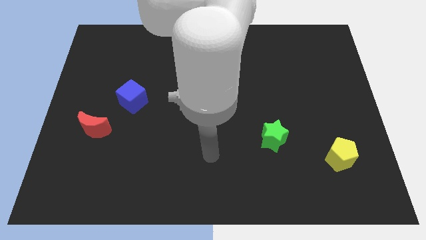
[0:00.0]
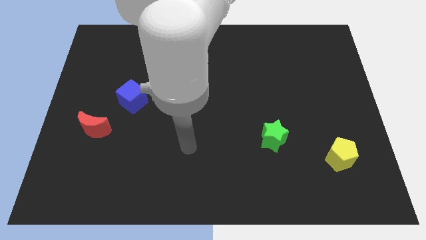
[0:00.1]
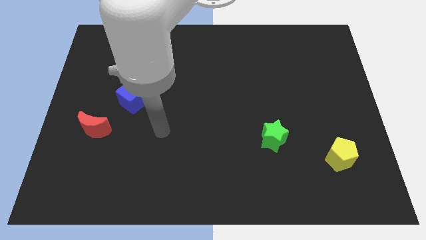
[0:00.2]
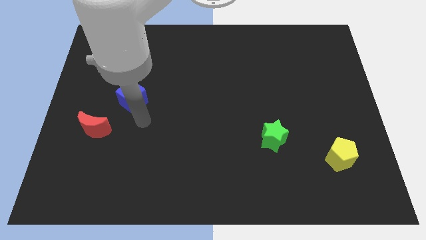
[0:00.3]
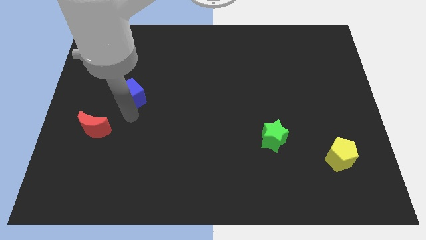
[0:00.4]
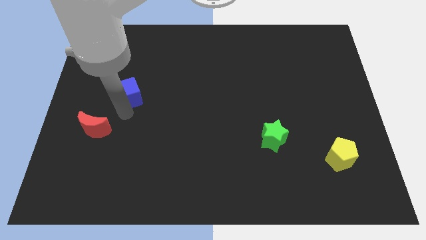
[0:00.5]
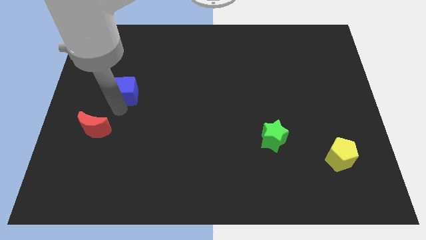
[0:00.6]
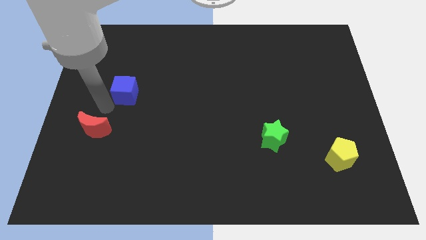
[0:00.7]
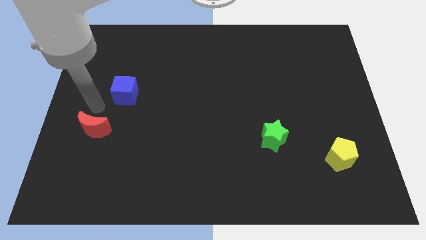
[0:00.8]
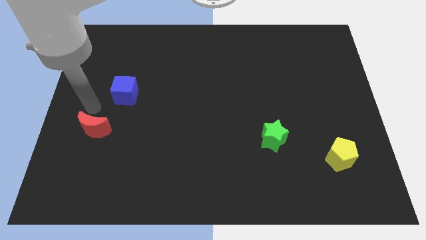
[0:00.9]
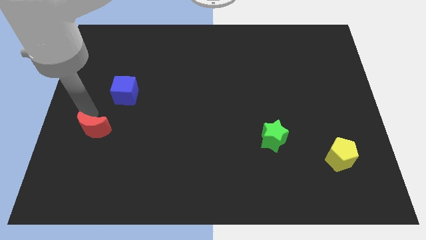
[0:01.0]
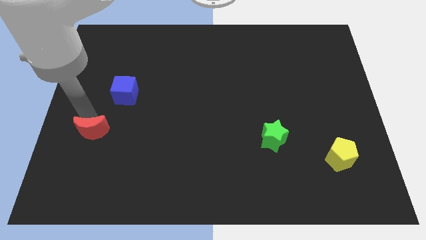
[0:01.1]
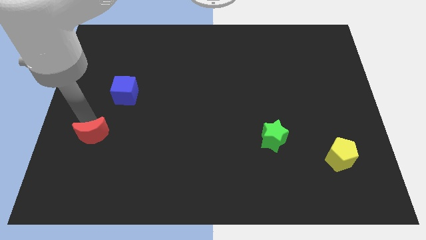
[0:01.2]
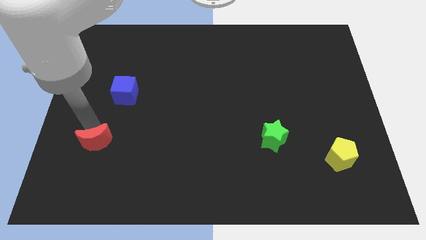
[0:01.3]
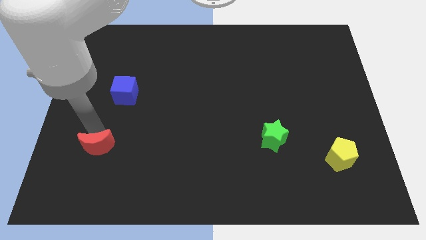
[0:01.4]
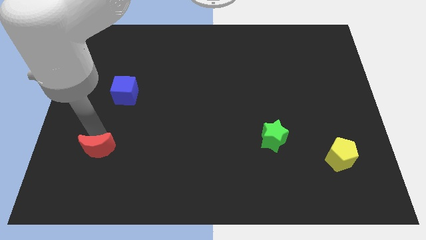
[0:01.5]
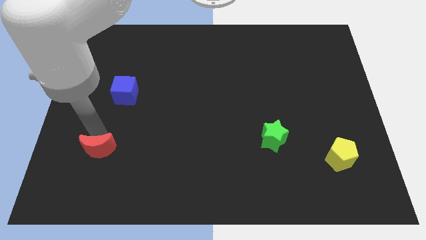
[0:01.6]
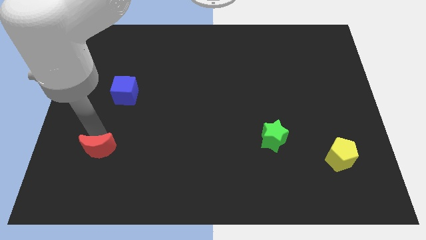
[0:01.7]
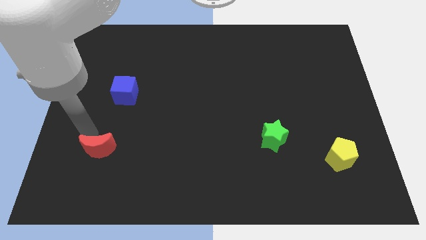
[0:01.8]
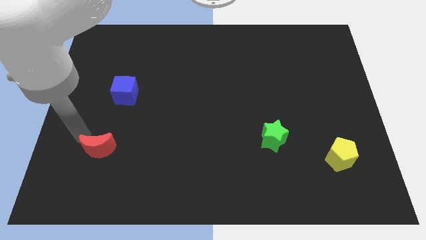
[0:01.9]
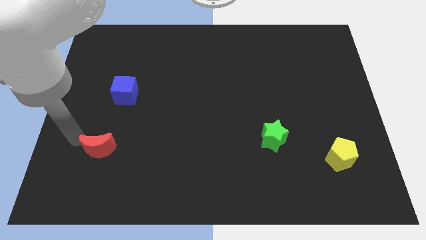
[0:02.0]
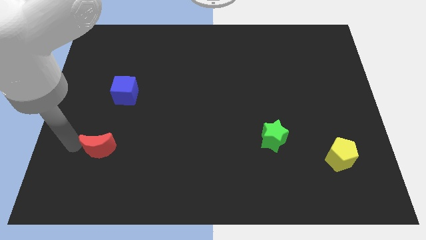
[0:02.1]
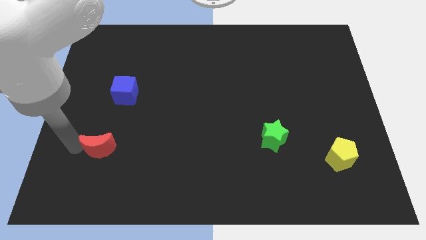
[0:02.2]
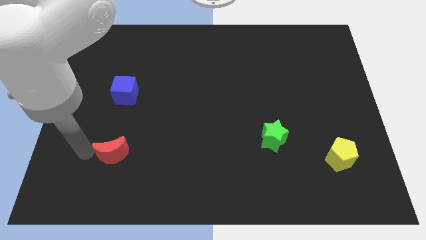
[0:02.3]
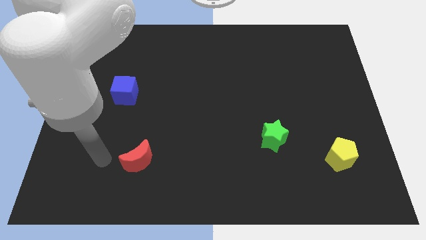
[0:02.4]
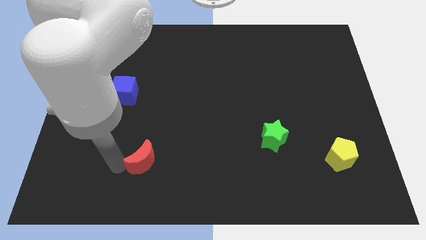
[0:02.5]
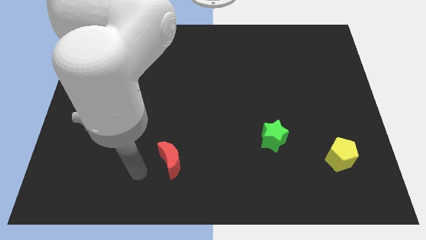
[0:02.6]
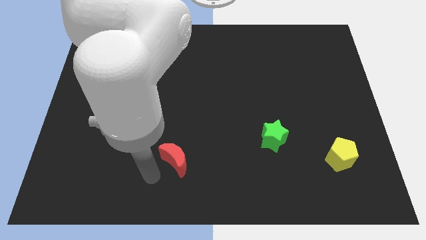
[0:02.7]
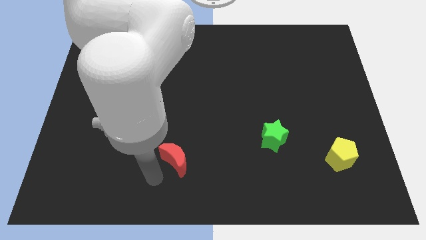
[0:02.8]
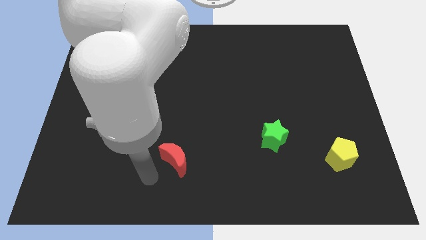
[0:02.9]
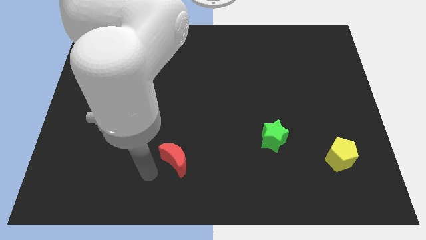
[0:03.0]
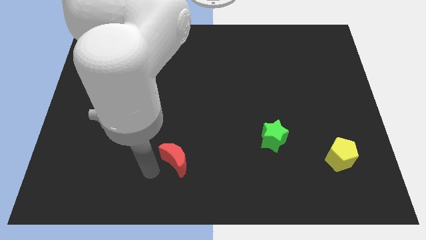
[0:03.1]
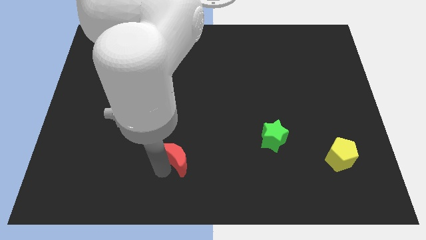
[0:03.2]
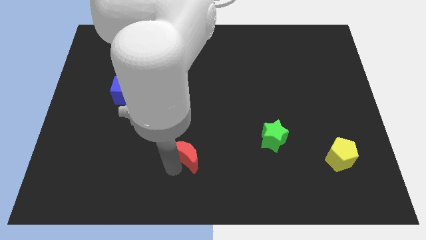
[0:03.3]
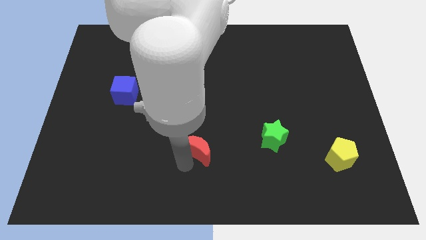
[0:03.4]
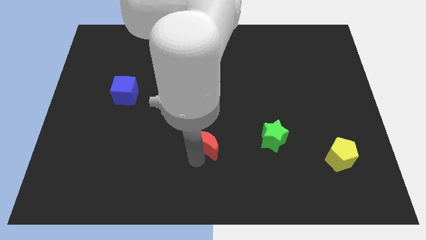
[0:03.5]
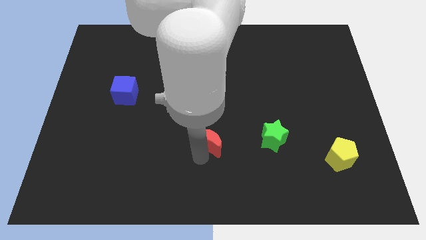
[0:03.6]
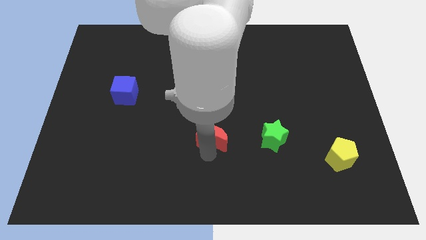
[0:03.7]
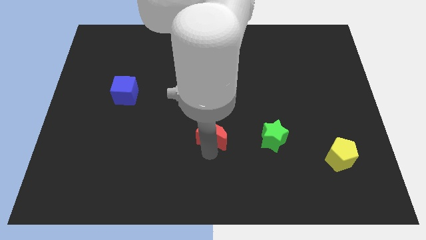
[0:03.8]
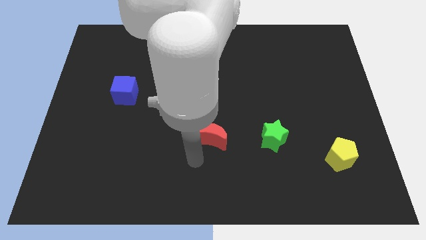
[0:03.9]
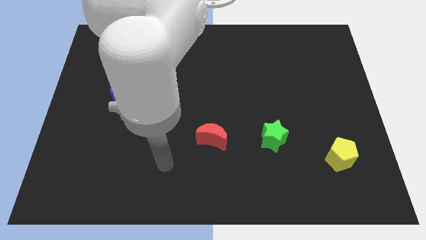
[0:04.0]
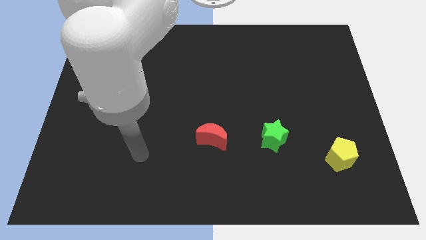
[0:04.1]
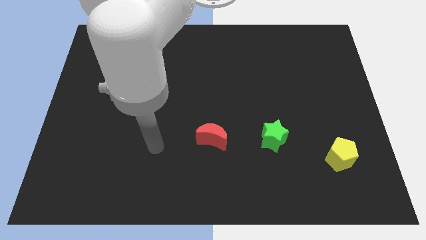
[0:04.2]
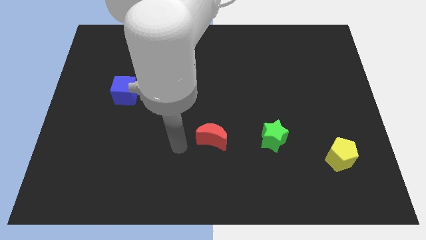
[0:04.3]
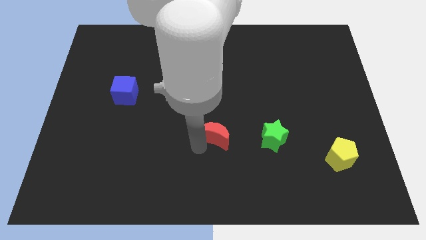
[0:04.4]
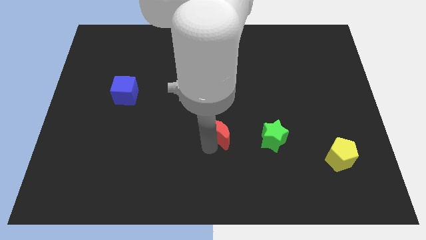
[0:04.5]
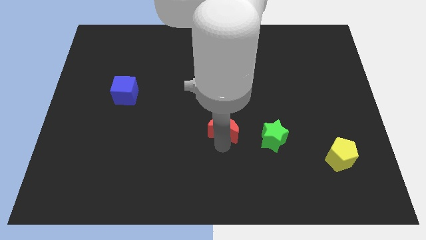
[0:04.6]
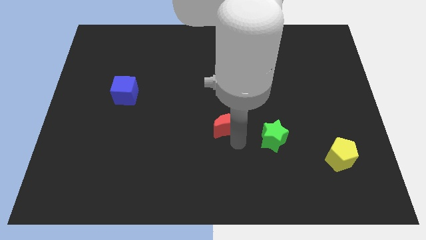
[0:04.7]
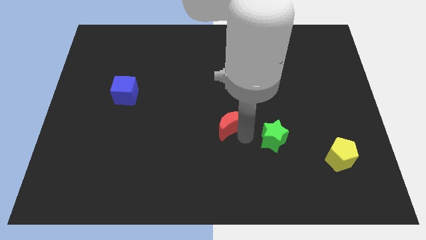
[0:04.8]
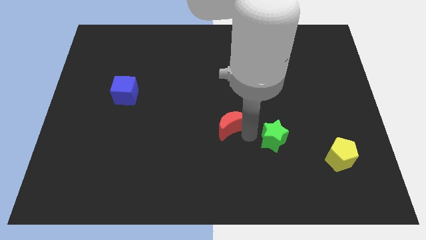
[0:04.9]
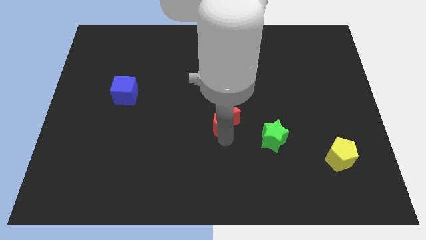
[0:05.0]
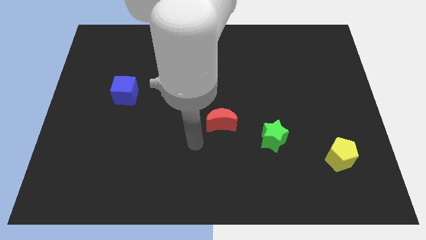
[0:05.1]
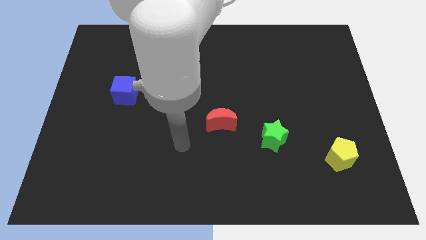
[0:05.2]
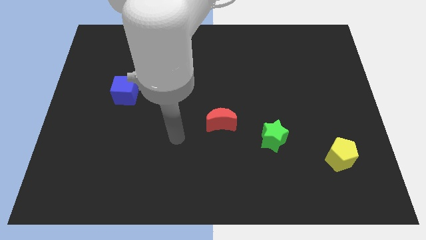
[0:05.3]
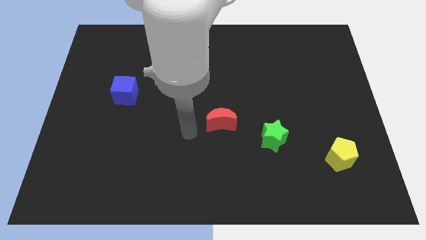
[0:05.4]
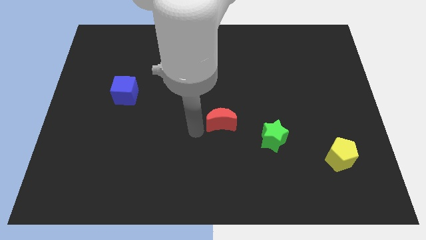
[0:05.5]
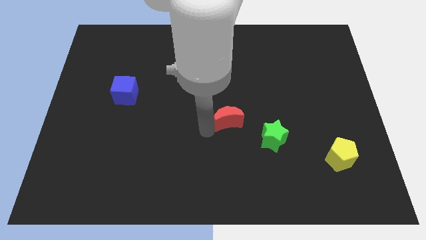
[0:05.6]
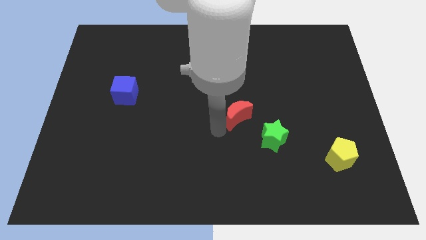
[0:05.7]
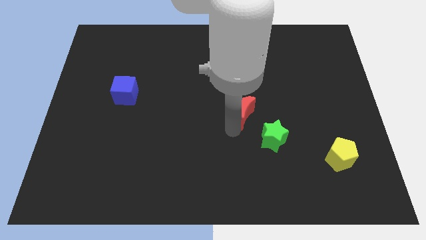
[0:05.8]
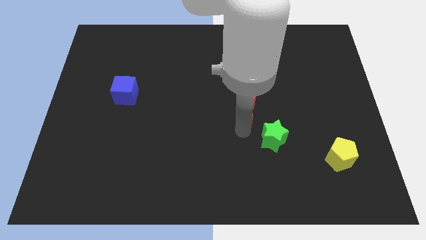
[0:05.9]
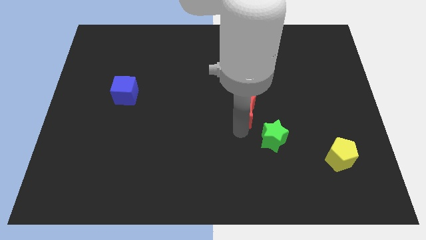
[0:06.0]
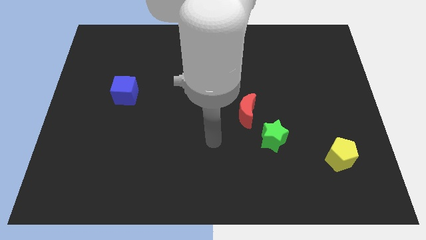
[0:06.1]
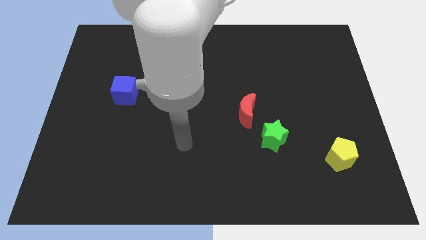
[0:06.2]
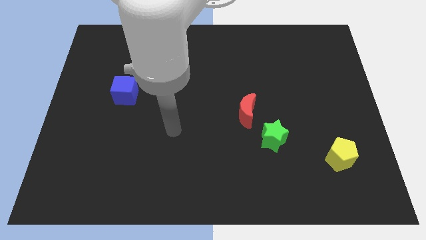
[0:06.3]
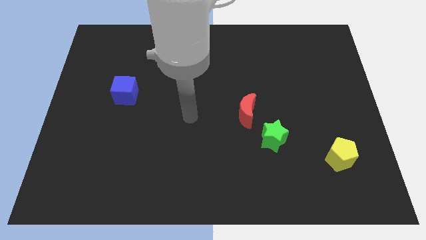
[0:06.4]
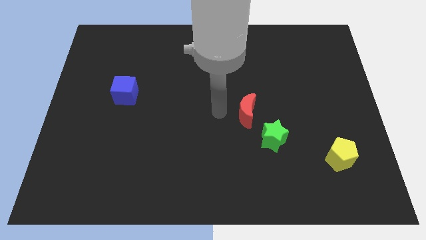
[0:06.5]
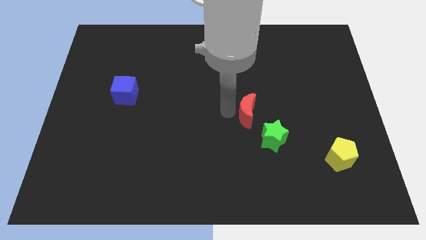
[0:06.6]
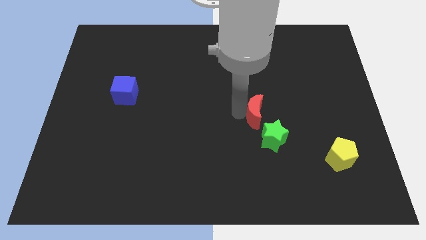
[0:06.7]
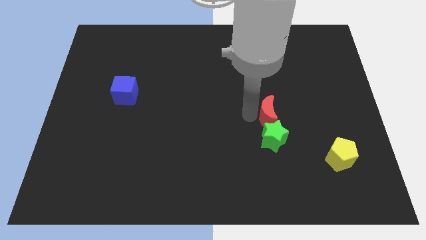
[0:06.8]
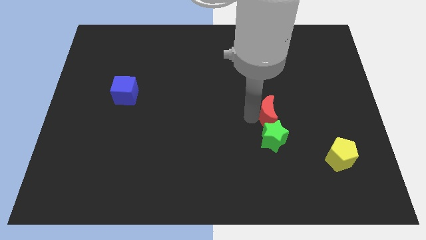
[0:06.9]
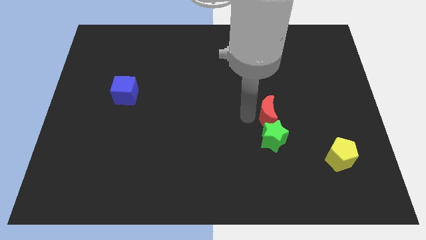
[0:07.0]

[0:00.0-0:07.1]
push the red block close to the green star

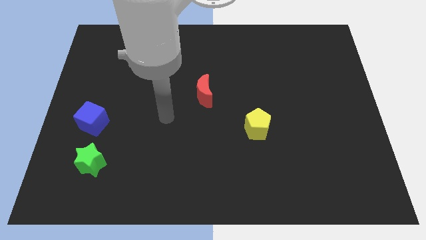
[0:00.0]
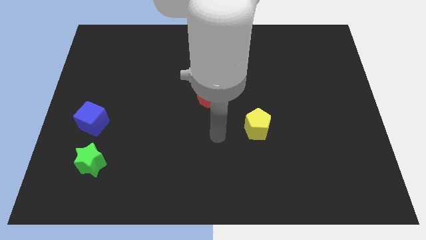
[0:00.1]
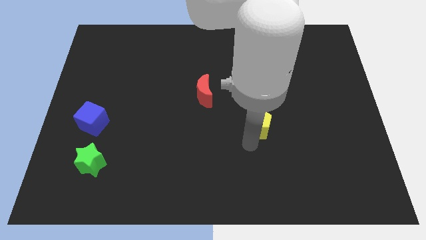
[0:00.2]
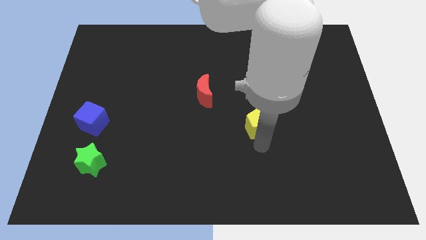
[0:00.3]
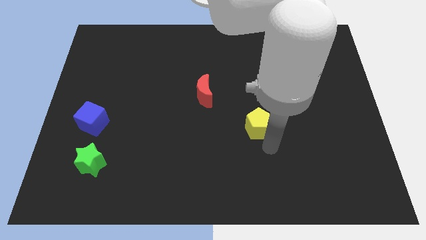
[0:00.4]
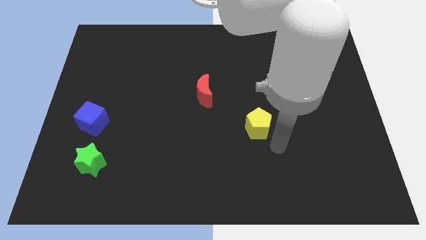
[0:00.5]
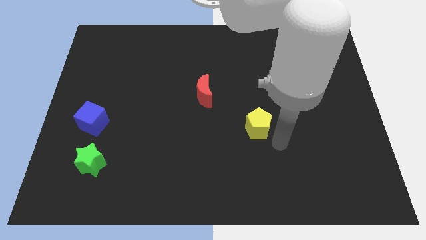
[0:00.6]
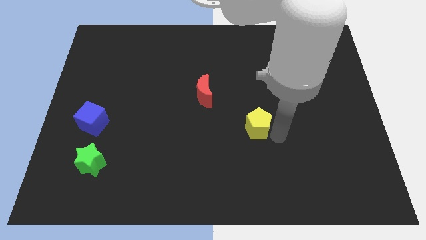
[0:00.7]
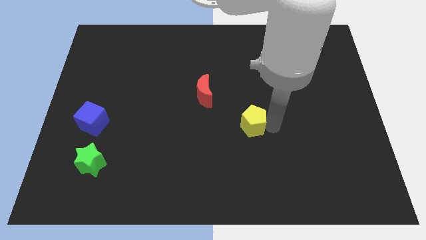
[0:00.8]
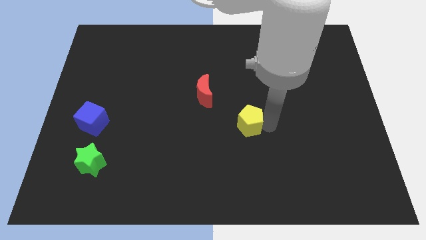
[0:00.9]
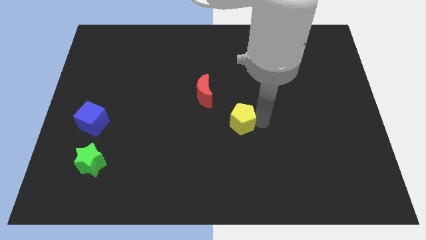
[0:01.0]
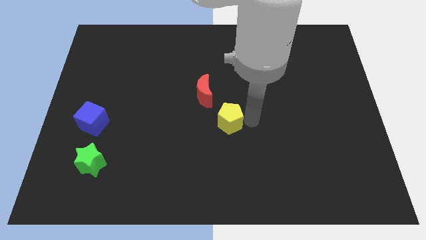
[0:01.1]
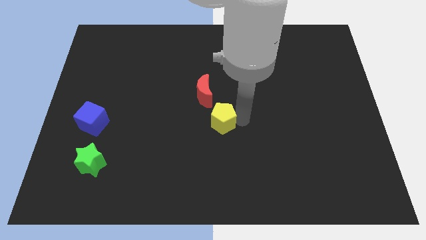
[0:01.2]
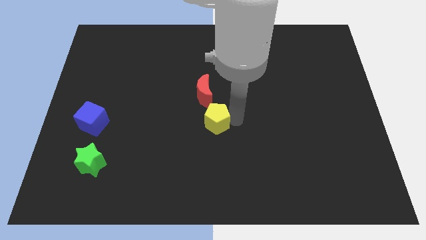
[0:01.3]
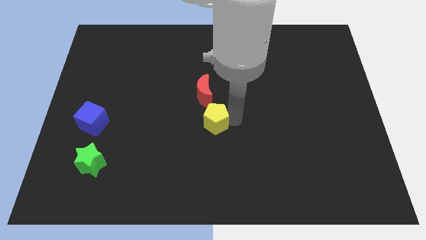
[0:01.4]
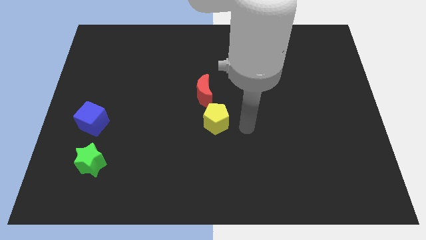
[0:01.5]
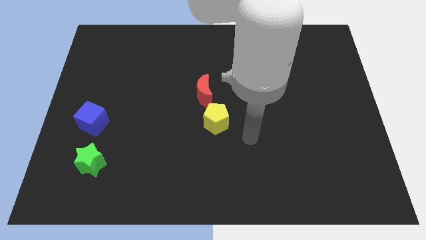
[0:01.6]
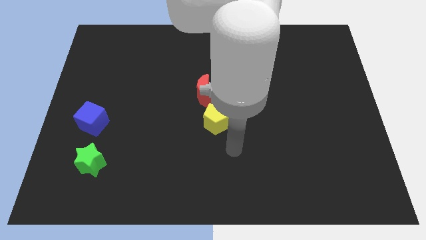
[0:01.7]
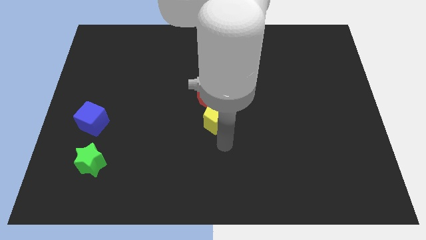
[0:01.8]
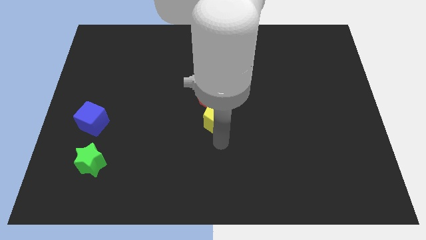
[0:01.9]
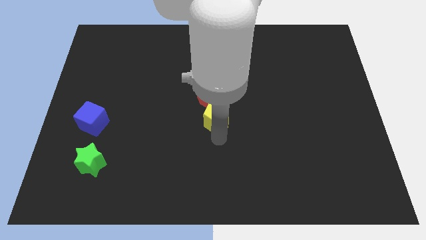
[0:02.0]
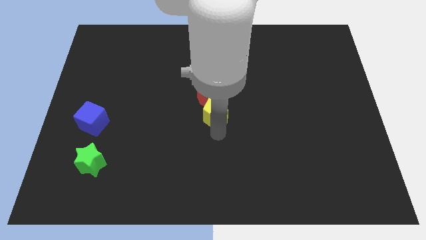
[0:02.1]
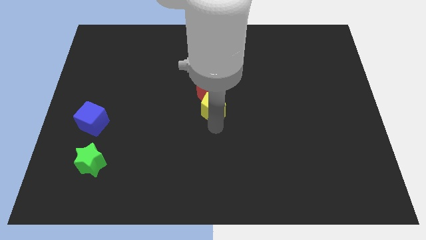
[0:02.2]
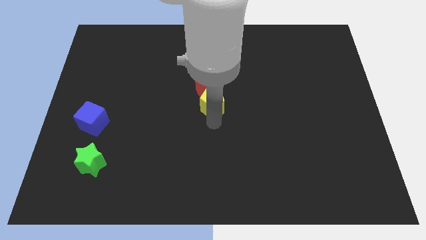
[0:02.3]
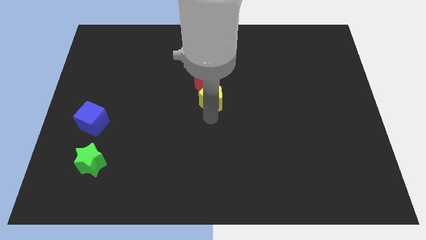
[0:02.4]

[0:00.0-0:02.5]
slide the yellow pentagon to the red block
